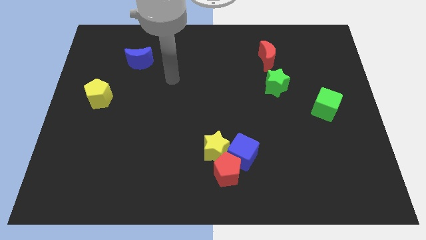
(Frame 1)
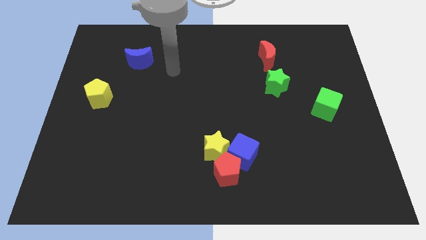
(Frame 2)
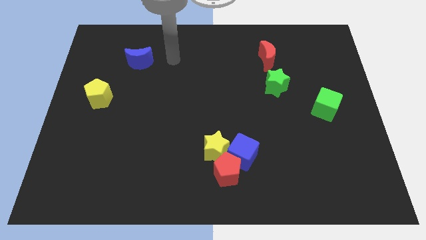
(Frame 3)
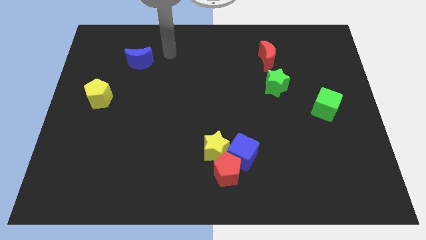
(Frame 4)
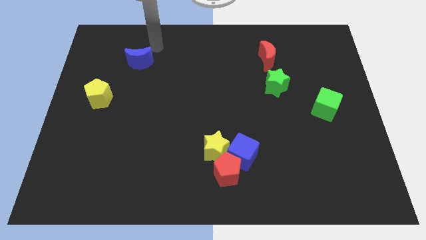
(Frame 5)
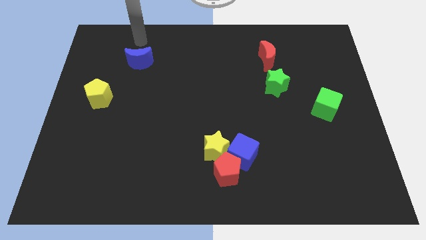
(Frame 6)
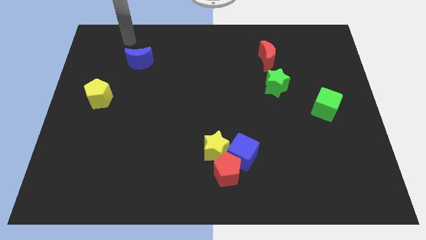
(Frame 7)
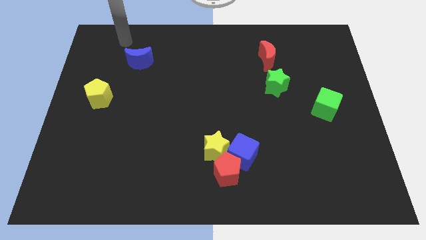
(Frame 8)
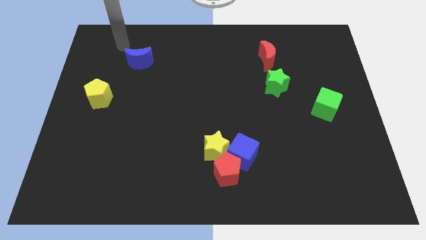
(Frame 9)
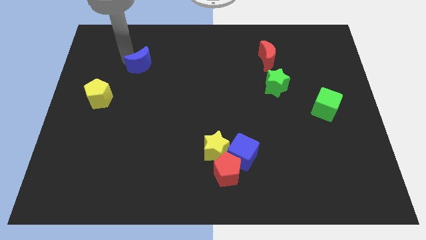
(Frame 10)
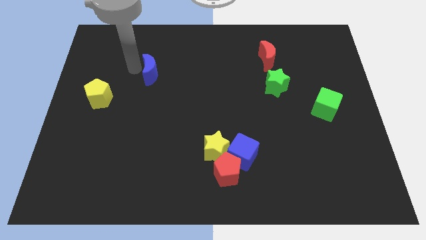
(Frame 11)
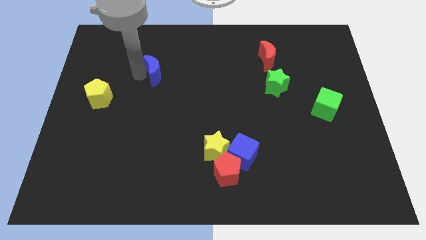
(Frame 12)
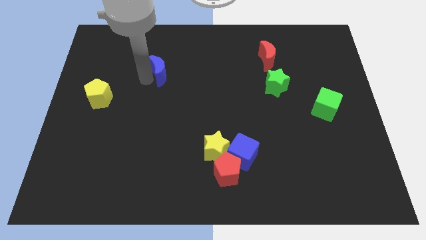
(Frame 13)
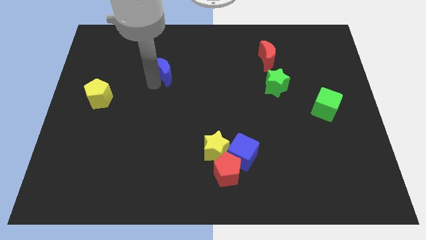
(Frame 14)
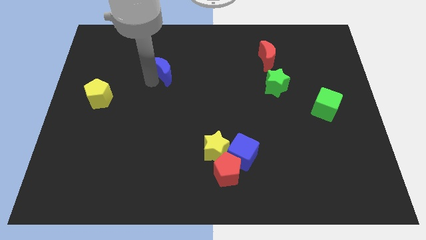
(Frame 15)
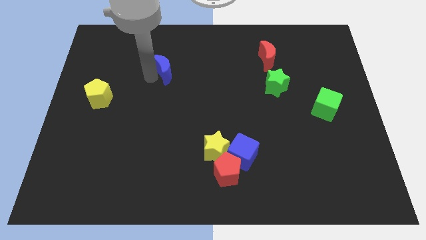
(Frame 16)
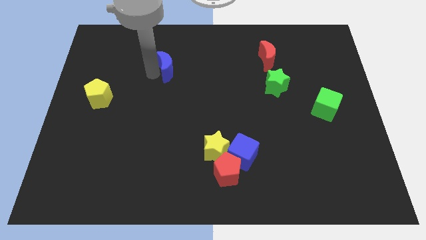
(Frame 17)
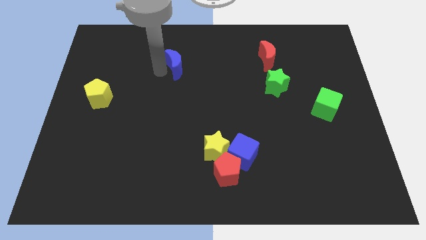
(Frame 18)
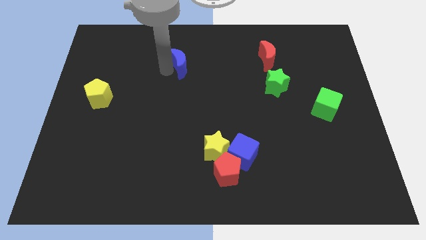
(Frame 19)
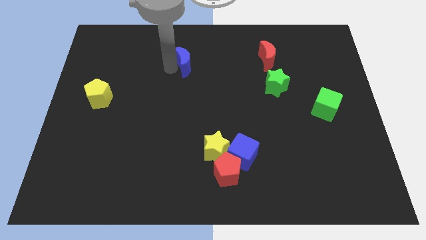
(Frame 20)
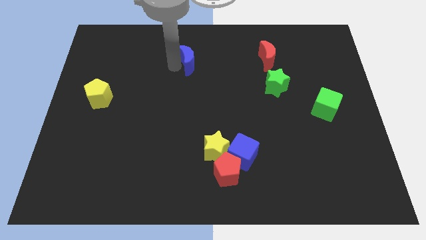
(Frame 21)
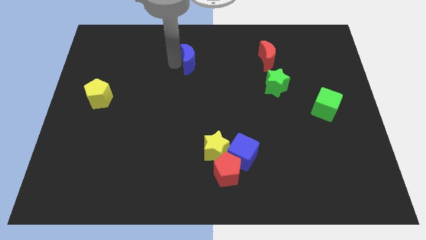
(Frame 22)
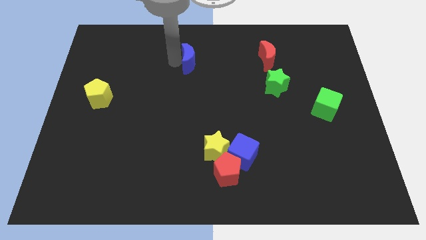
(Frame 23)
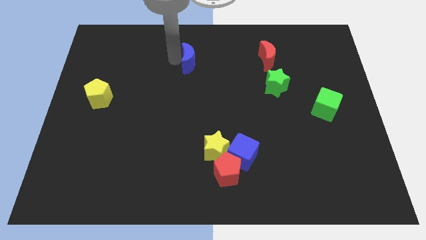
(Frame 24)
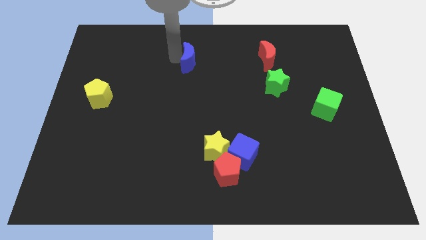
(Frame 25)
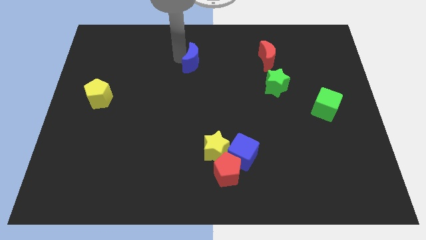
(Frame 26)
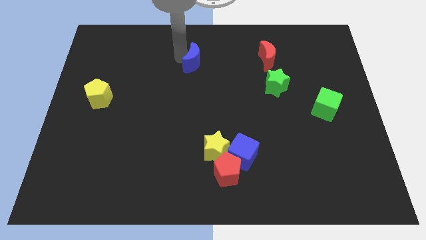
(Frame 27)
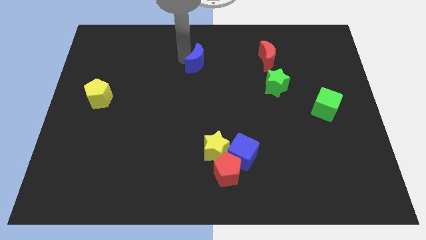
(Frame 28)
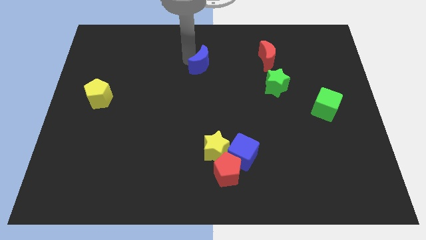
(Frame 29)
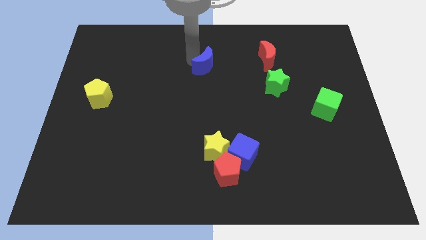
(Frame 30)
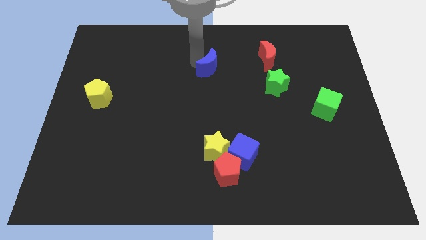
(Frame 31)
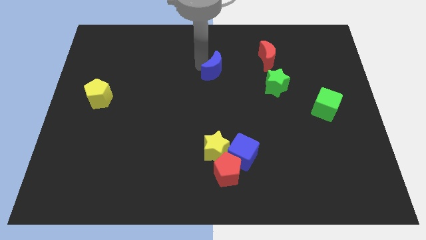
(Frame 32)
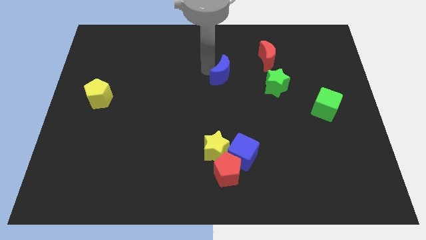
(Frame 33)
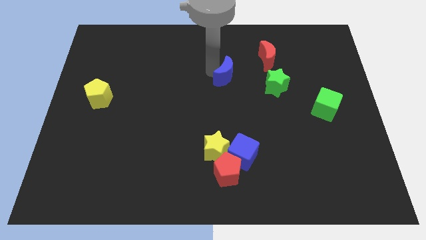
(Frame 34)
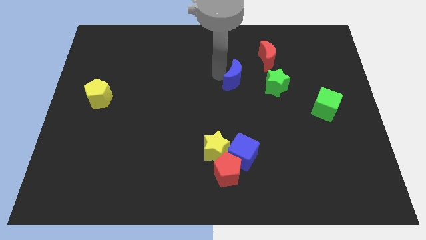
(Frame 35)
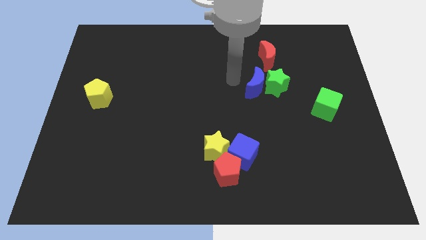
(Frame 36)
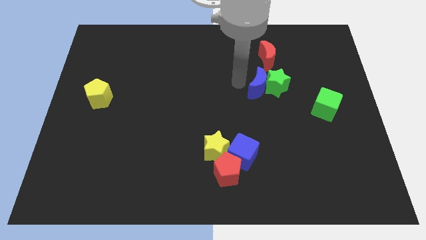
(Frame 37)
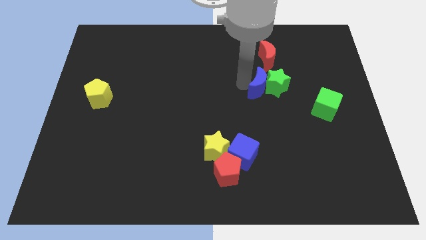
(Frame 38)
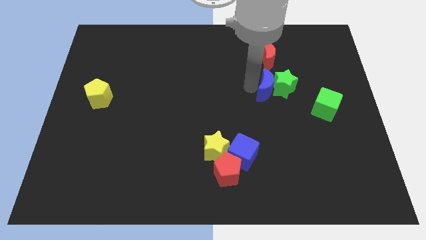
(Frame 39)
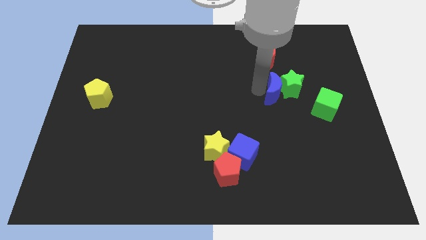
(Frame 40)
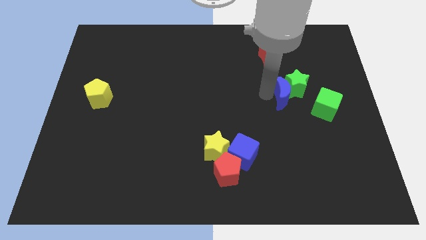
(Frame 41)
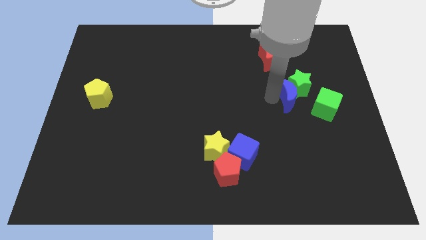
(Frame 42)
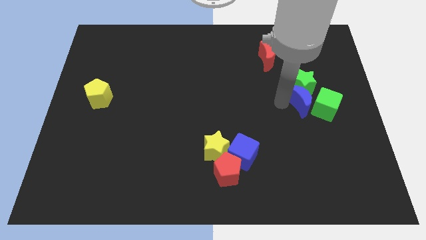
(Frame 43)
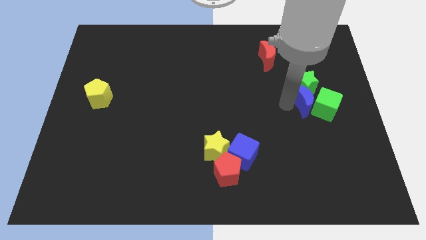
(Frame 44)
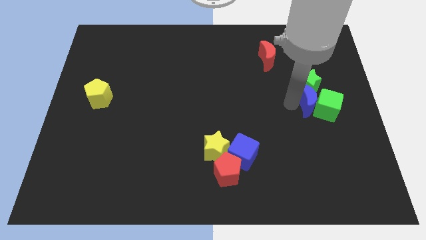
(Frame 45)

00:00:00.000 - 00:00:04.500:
push the blue moon towards the green cube

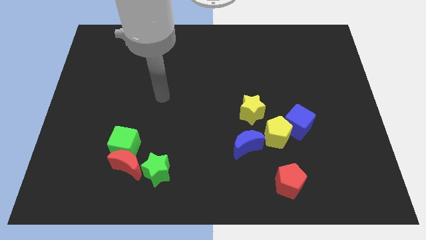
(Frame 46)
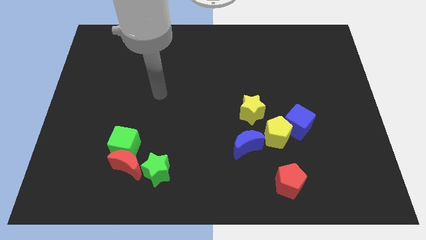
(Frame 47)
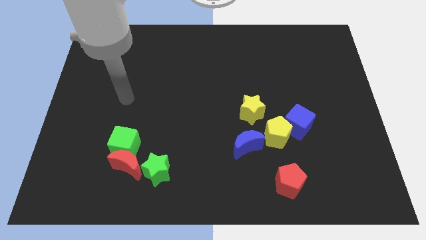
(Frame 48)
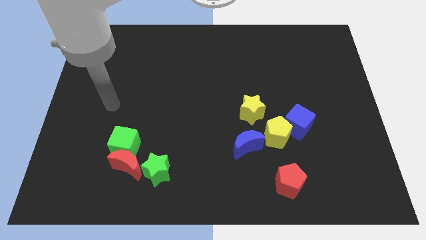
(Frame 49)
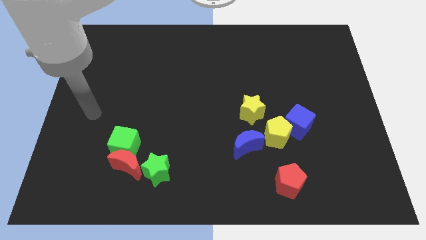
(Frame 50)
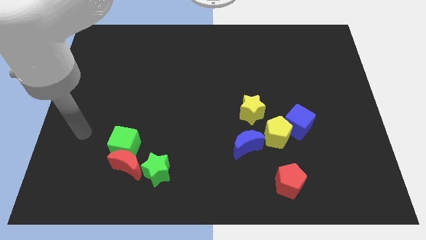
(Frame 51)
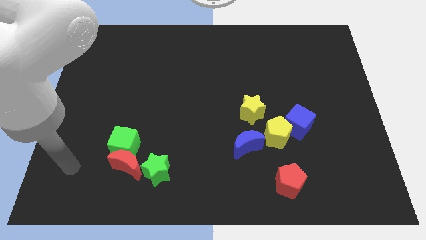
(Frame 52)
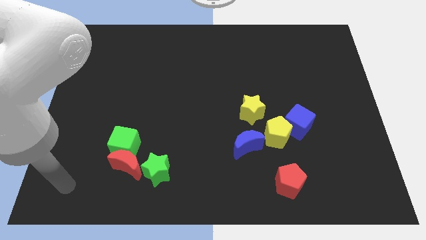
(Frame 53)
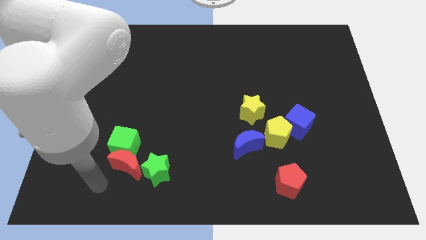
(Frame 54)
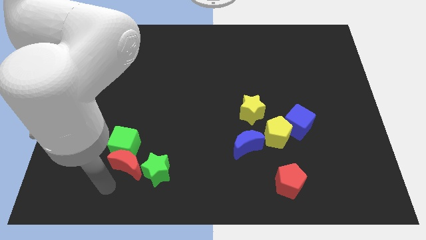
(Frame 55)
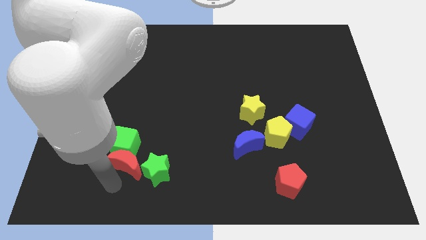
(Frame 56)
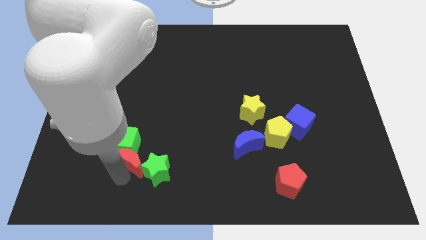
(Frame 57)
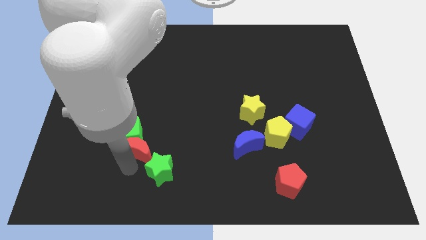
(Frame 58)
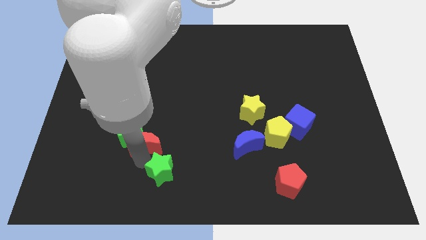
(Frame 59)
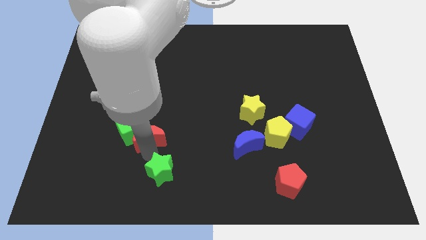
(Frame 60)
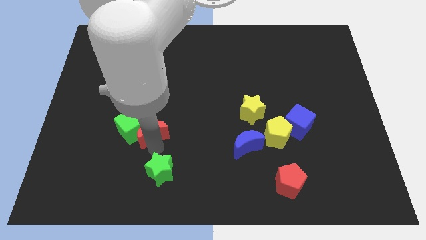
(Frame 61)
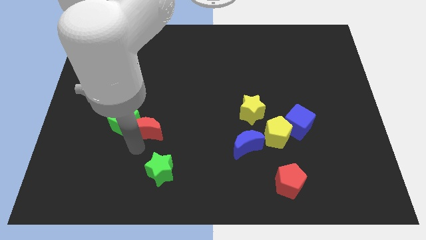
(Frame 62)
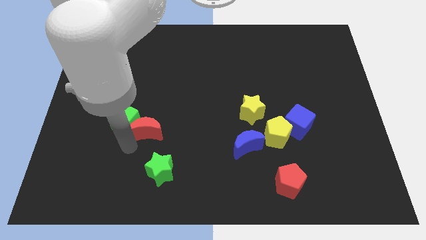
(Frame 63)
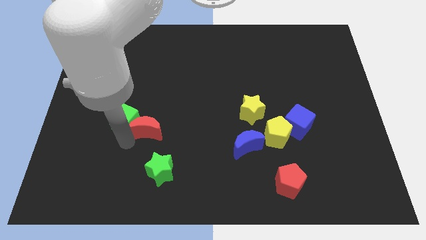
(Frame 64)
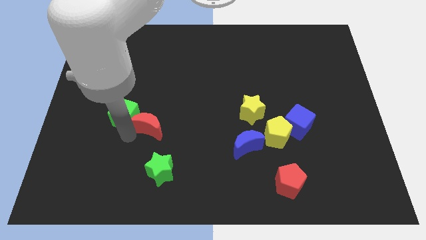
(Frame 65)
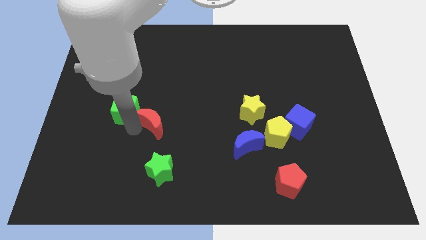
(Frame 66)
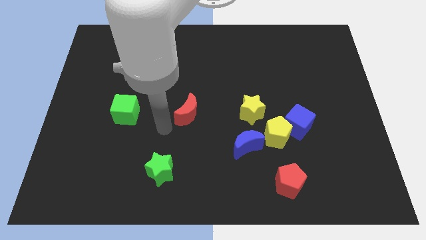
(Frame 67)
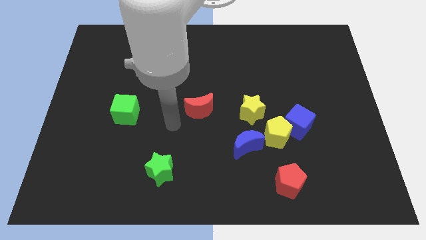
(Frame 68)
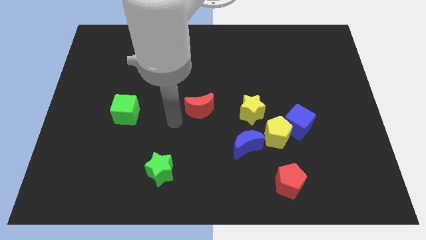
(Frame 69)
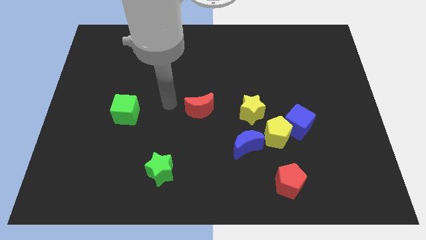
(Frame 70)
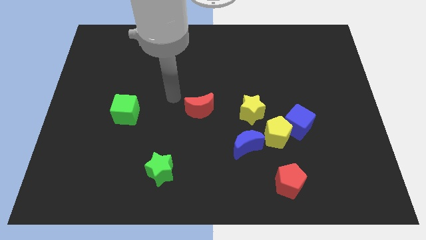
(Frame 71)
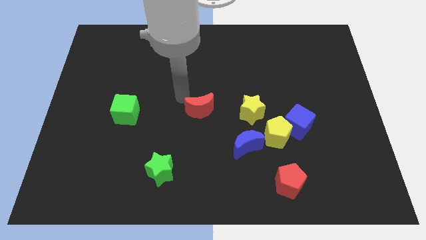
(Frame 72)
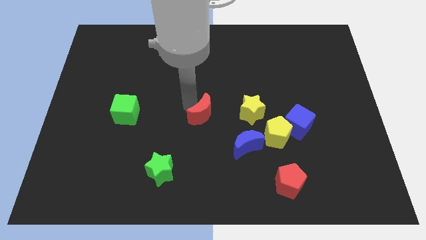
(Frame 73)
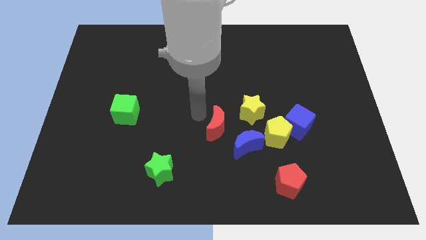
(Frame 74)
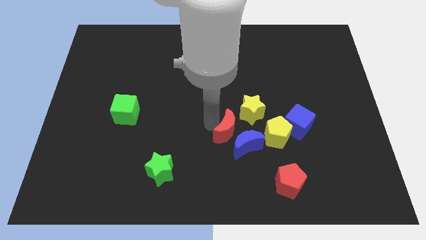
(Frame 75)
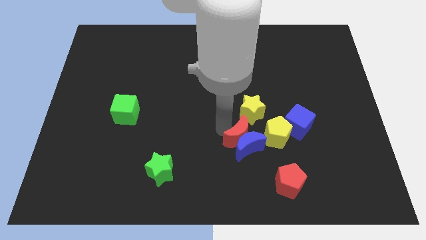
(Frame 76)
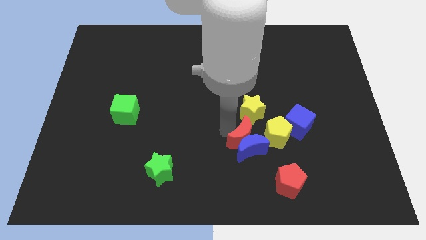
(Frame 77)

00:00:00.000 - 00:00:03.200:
move the red moon to the blue moon

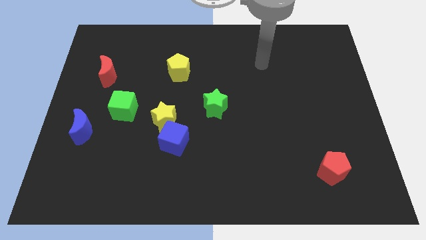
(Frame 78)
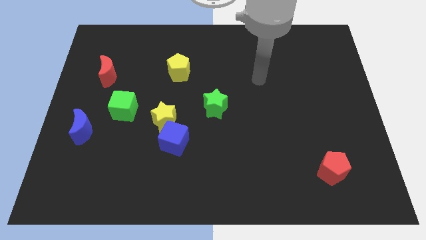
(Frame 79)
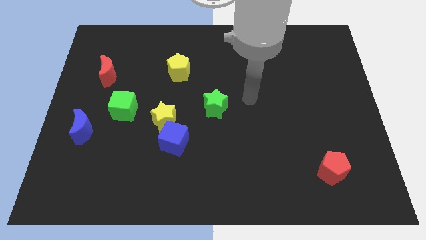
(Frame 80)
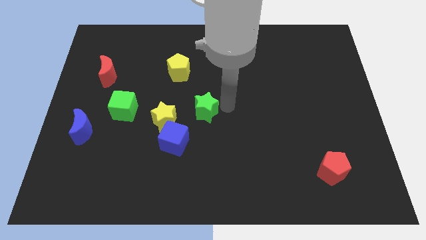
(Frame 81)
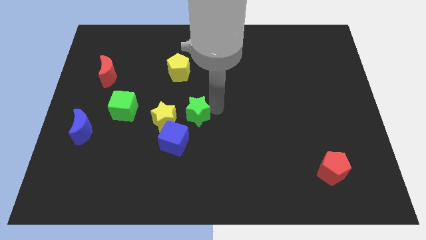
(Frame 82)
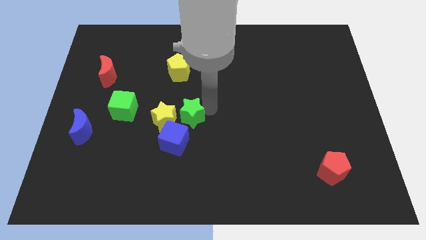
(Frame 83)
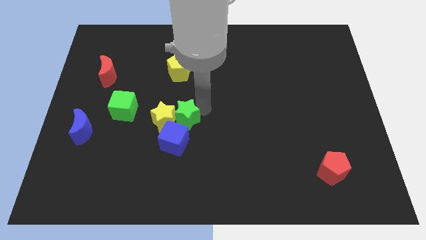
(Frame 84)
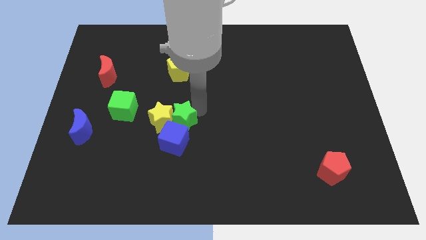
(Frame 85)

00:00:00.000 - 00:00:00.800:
put the green star next to the yellow star

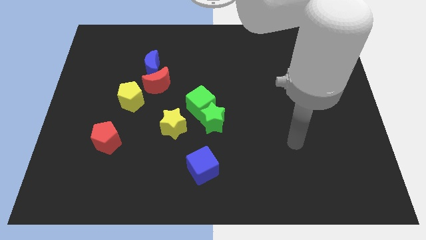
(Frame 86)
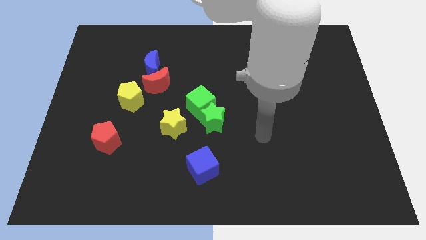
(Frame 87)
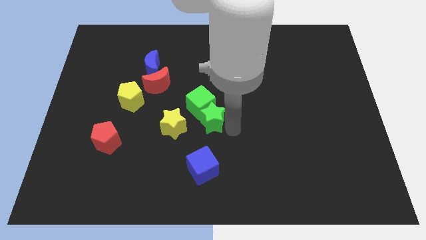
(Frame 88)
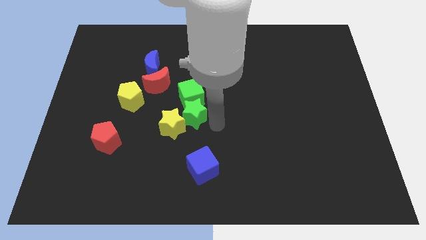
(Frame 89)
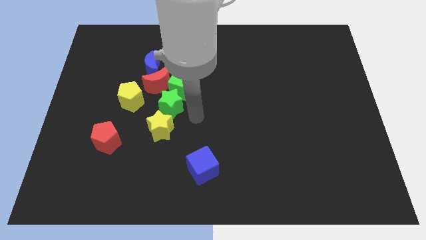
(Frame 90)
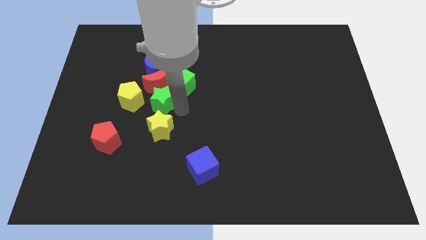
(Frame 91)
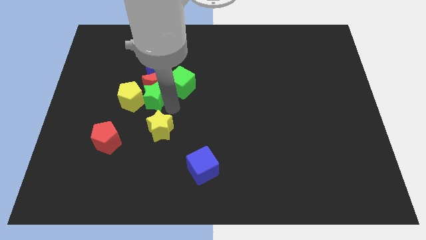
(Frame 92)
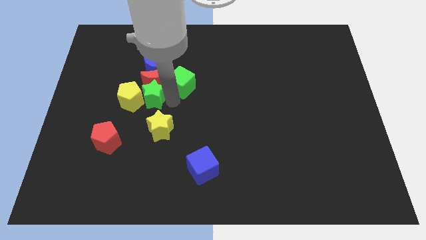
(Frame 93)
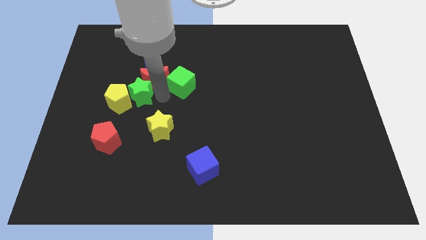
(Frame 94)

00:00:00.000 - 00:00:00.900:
put the green star next to the yellow pentagon
